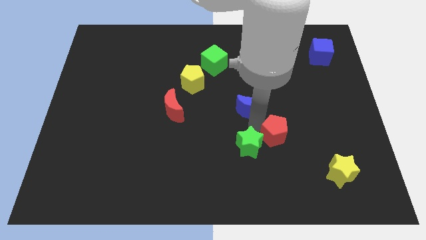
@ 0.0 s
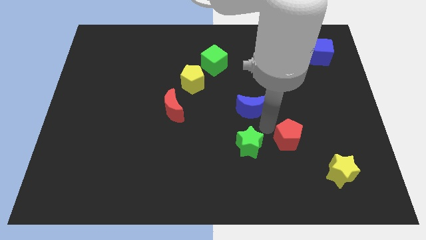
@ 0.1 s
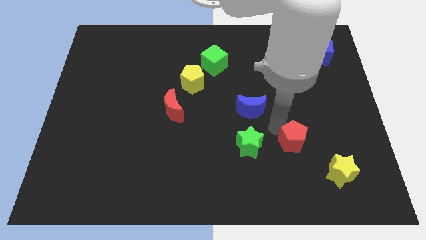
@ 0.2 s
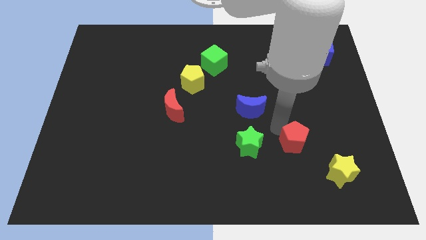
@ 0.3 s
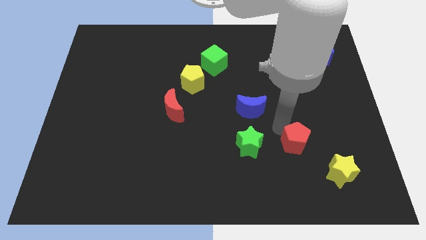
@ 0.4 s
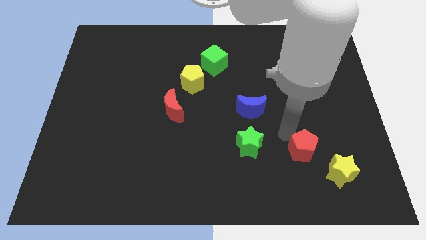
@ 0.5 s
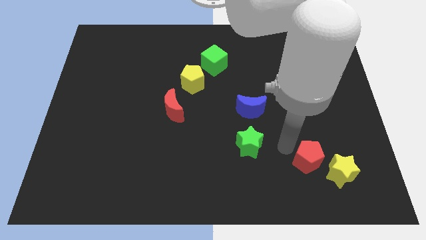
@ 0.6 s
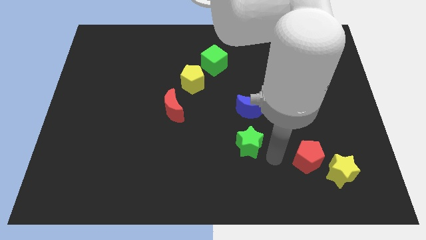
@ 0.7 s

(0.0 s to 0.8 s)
place red pentagon beside yellow star

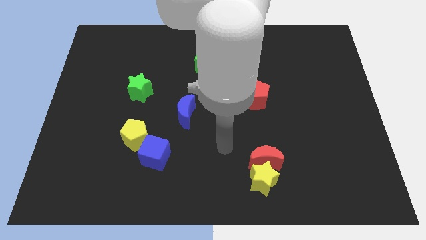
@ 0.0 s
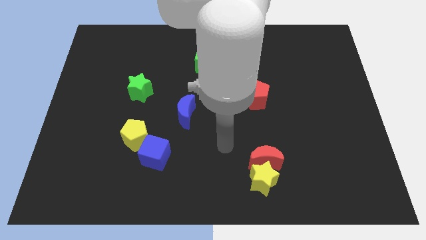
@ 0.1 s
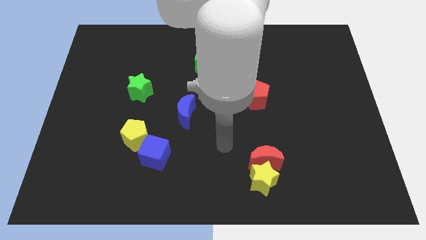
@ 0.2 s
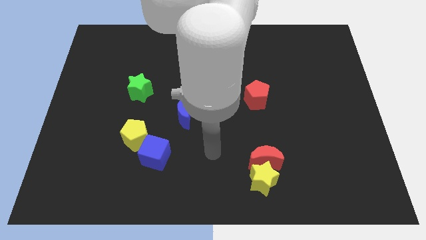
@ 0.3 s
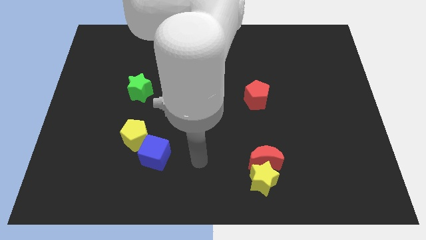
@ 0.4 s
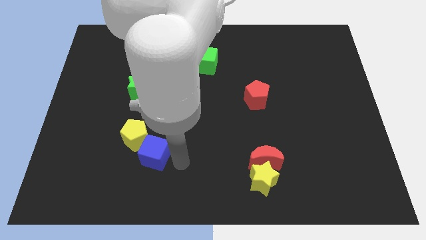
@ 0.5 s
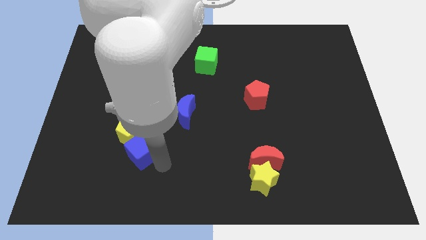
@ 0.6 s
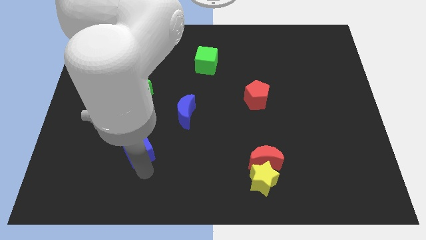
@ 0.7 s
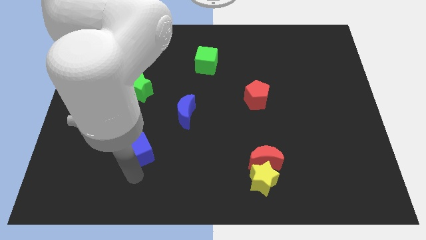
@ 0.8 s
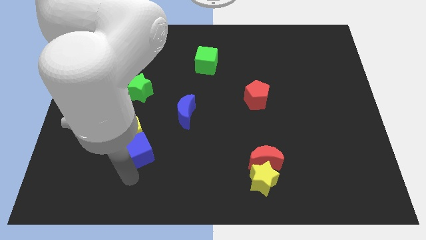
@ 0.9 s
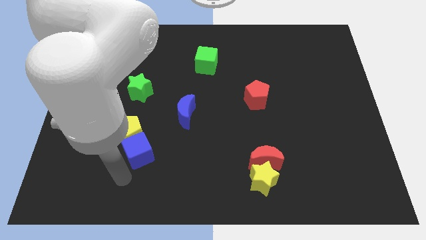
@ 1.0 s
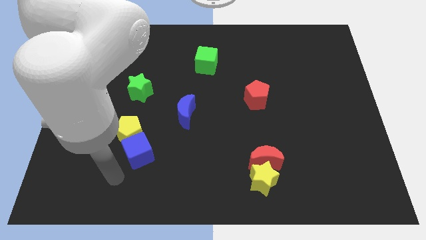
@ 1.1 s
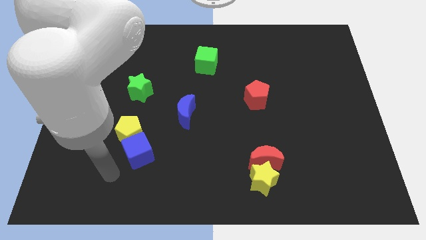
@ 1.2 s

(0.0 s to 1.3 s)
push the blue cube into the yellow pentagon

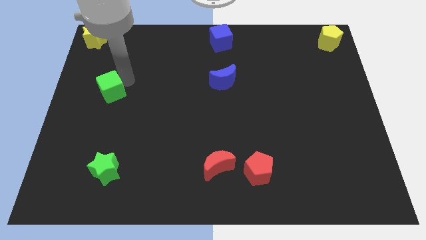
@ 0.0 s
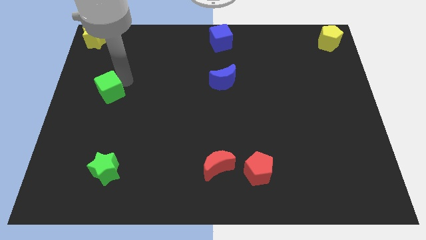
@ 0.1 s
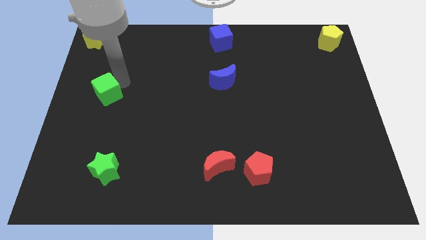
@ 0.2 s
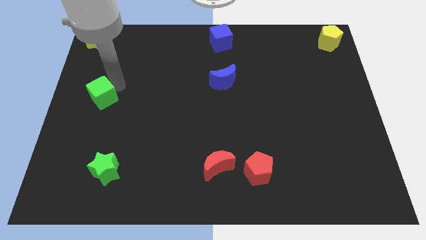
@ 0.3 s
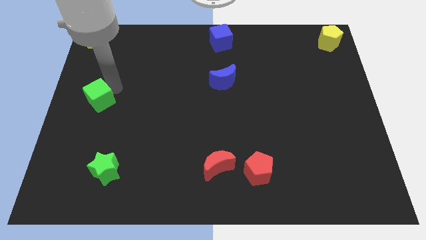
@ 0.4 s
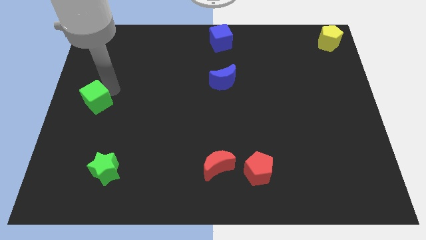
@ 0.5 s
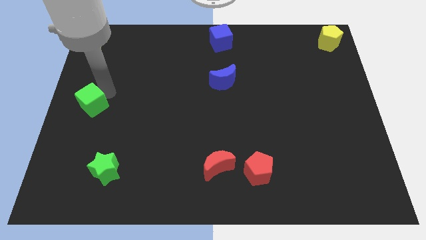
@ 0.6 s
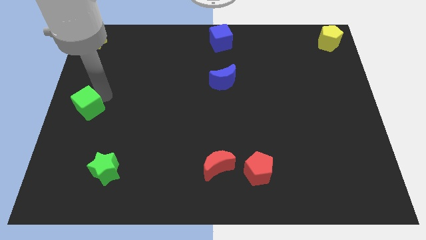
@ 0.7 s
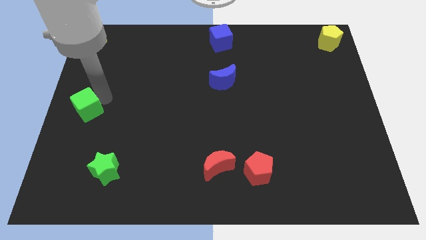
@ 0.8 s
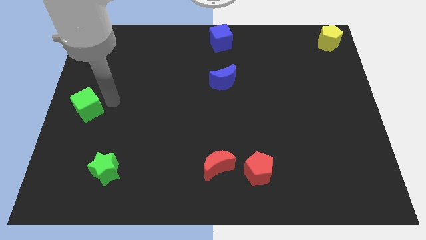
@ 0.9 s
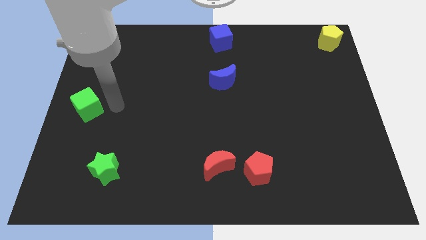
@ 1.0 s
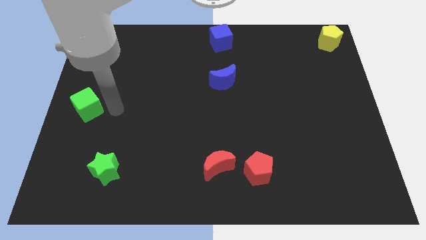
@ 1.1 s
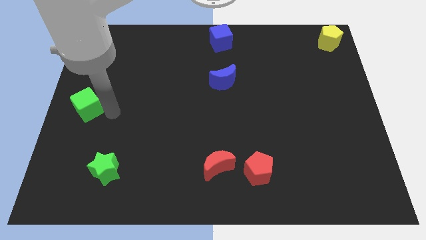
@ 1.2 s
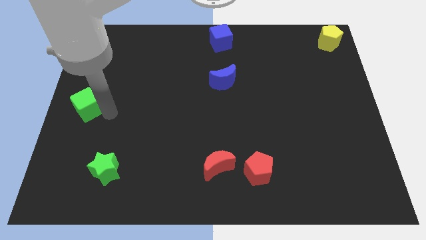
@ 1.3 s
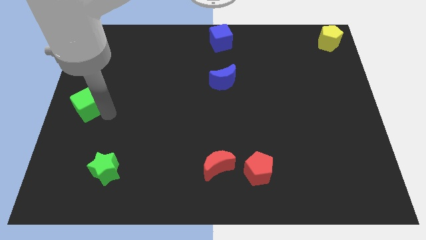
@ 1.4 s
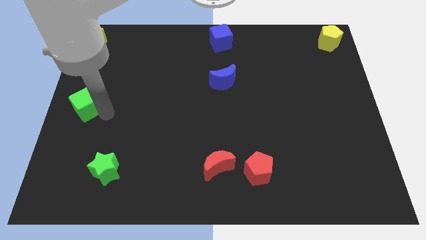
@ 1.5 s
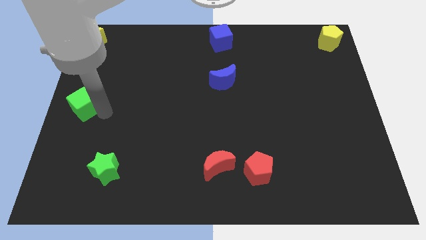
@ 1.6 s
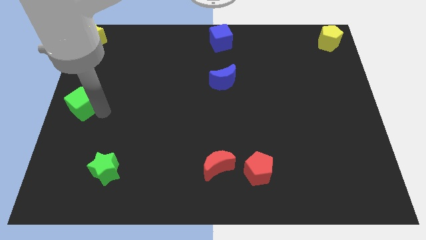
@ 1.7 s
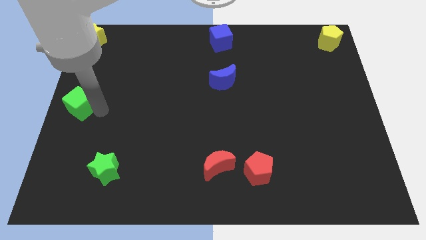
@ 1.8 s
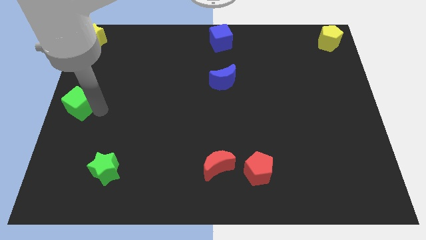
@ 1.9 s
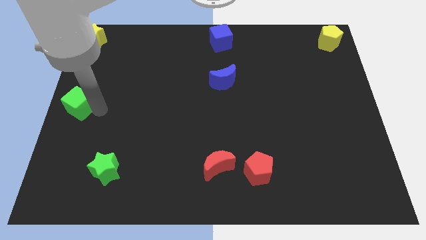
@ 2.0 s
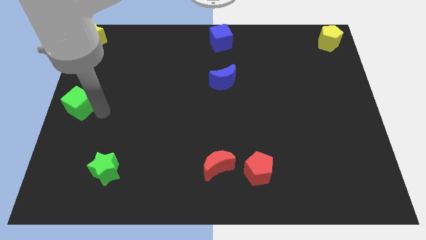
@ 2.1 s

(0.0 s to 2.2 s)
push the green cube to the center left side of the board

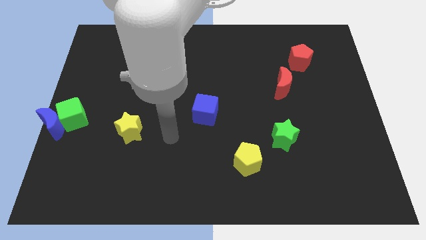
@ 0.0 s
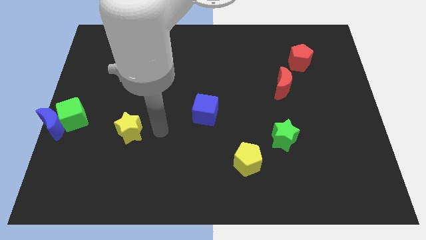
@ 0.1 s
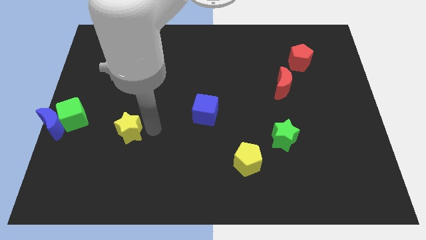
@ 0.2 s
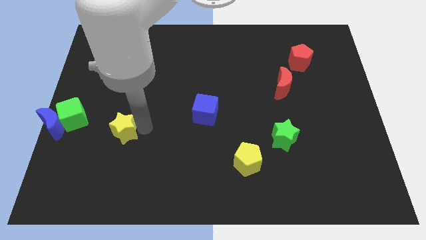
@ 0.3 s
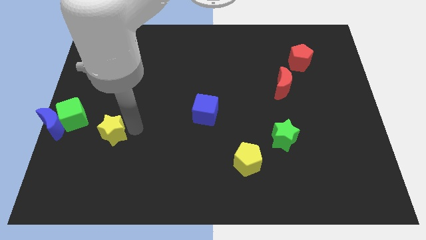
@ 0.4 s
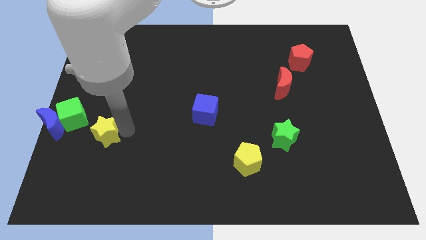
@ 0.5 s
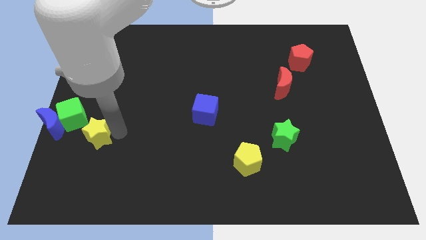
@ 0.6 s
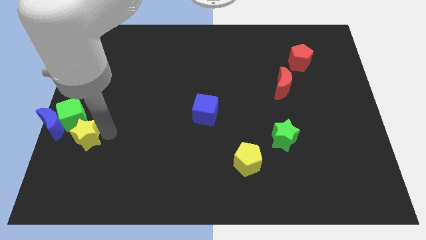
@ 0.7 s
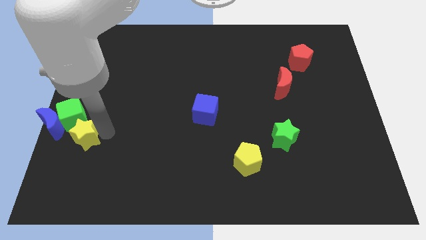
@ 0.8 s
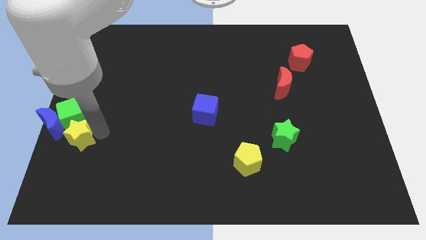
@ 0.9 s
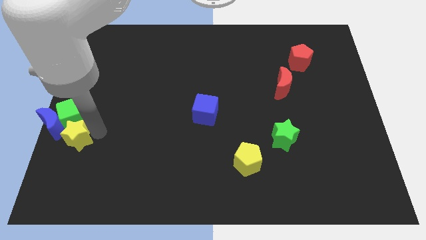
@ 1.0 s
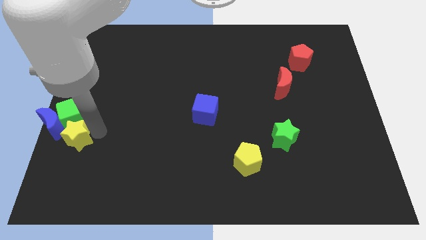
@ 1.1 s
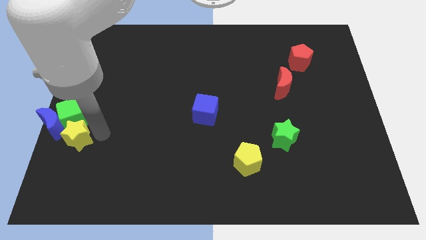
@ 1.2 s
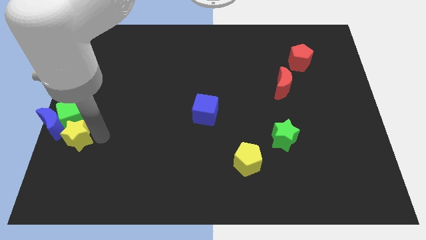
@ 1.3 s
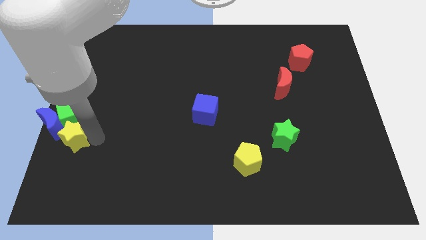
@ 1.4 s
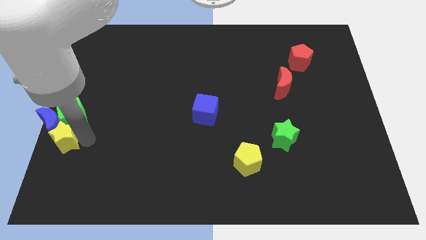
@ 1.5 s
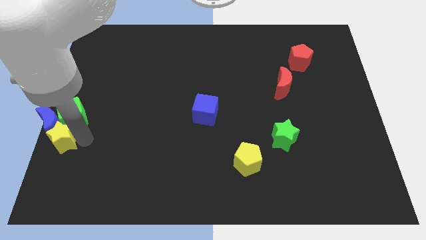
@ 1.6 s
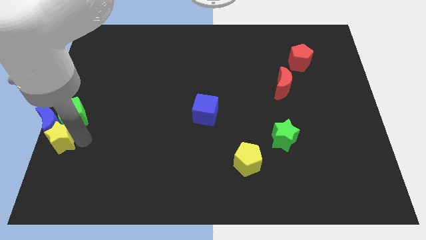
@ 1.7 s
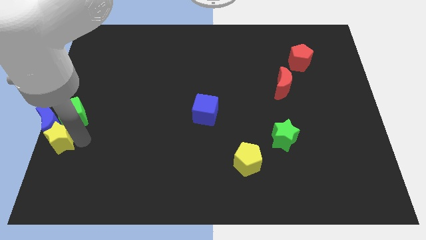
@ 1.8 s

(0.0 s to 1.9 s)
put the yellow star diagonally bottom left to the green cube

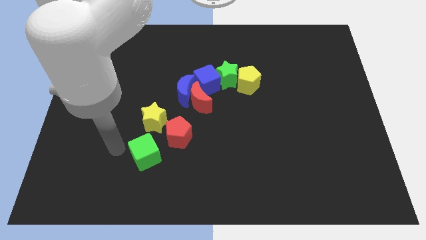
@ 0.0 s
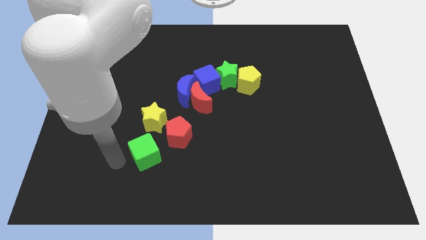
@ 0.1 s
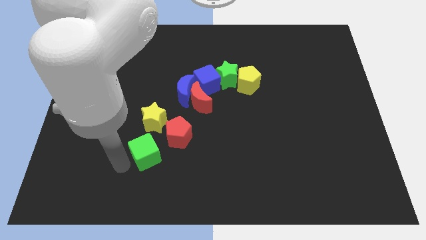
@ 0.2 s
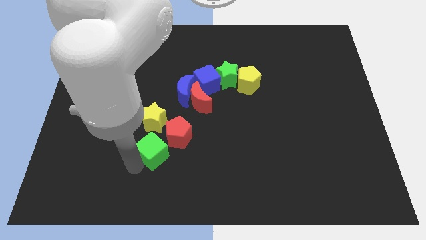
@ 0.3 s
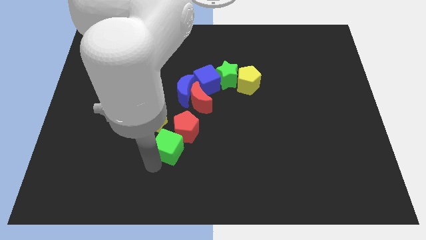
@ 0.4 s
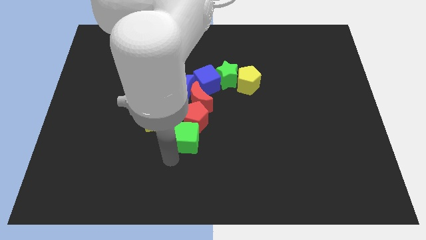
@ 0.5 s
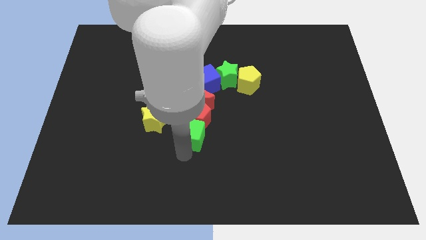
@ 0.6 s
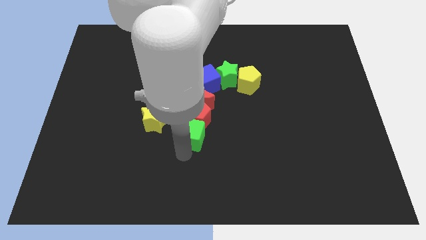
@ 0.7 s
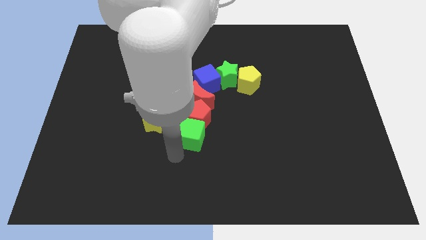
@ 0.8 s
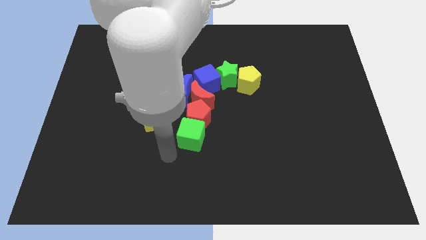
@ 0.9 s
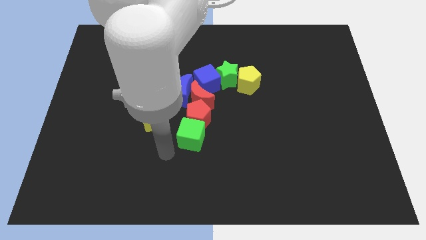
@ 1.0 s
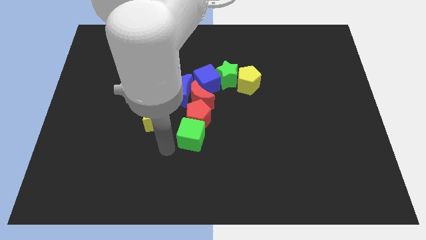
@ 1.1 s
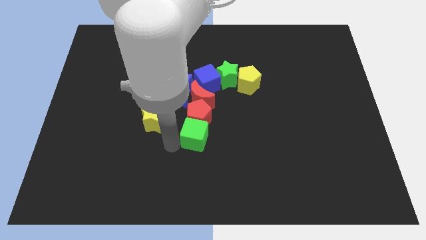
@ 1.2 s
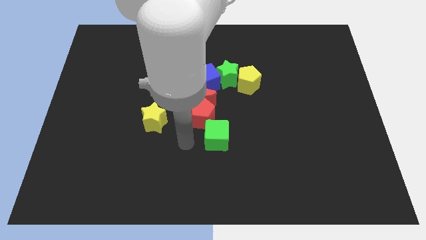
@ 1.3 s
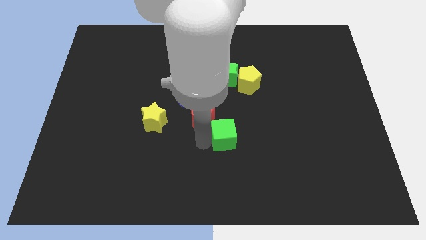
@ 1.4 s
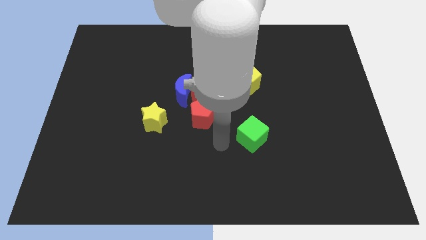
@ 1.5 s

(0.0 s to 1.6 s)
placa the green cube diagonally bottom right to the red pentagon

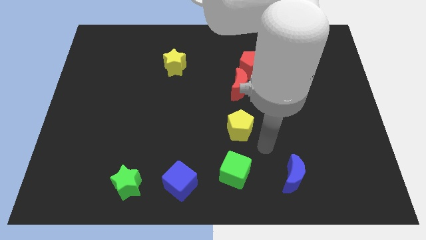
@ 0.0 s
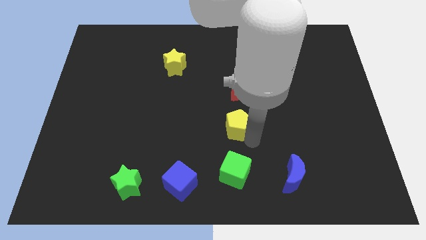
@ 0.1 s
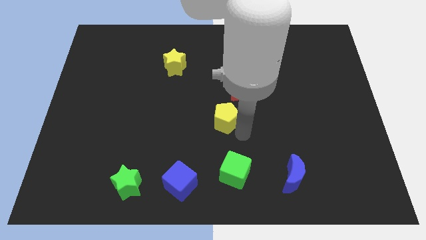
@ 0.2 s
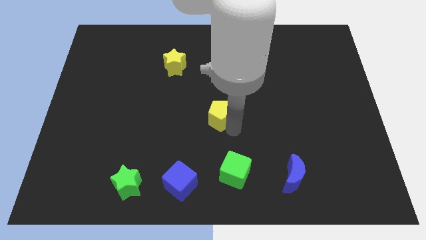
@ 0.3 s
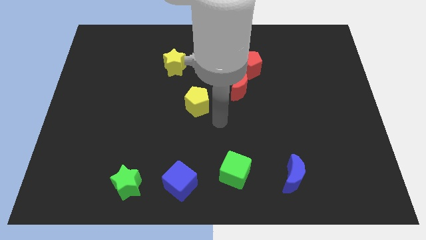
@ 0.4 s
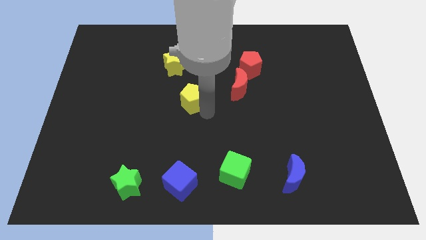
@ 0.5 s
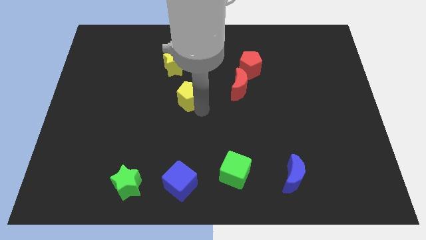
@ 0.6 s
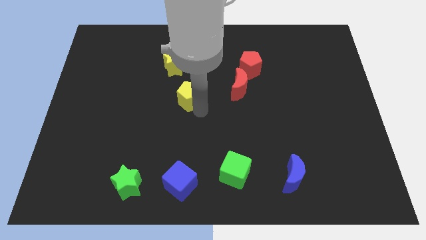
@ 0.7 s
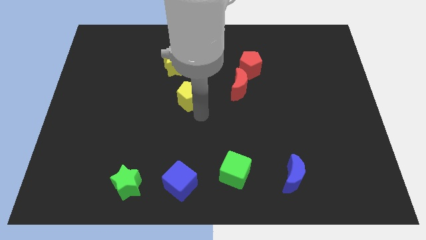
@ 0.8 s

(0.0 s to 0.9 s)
push the yellow pentagon towards the left side of the red crescent

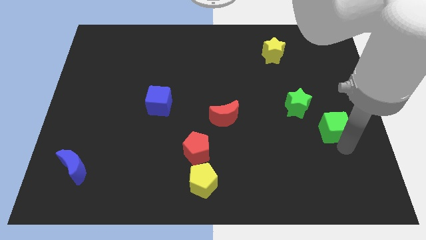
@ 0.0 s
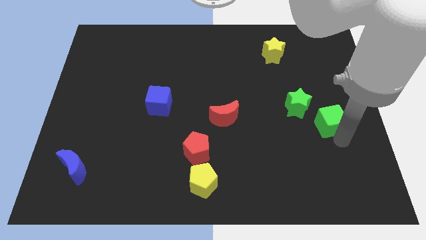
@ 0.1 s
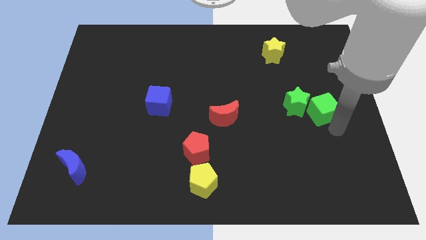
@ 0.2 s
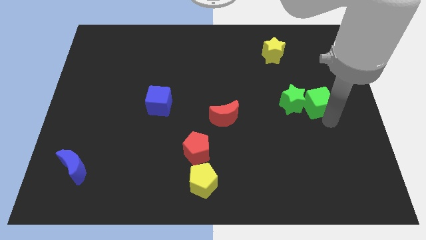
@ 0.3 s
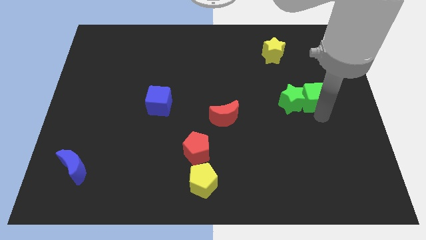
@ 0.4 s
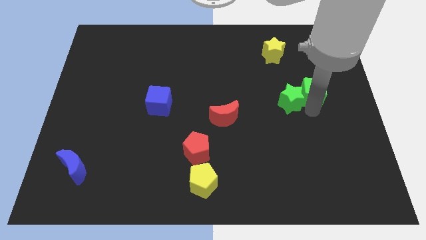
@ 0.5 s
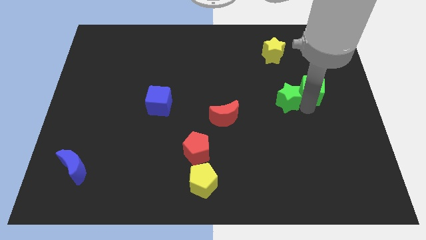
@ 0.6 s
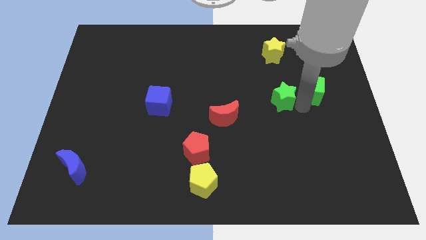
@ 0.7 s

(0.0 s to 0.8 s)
move the green cube right to the green star
